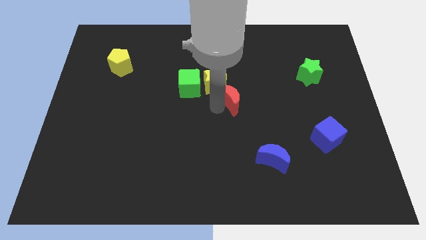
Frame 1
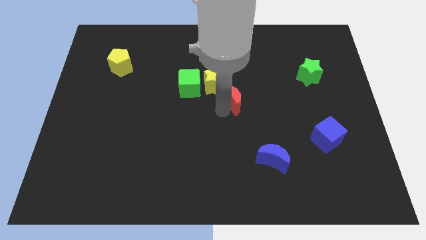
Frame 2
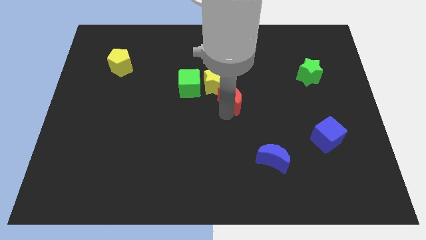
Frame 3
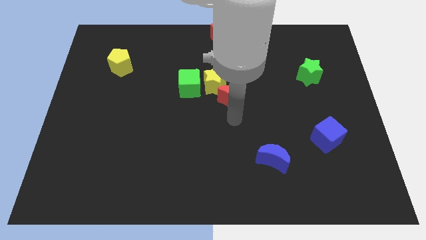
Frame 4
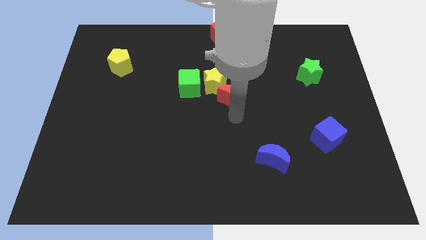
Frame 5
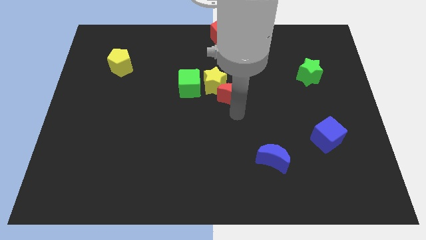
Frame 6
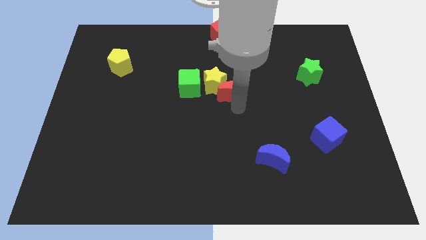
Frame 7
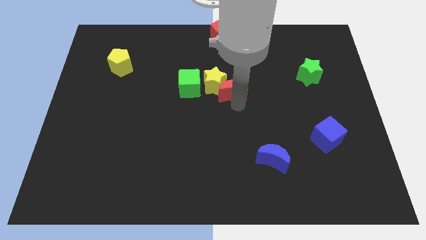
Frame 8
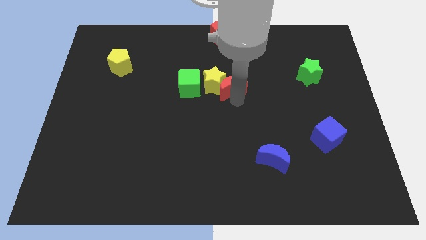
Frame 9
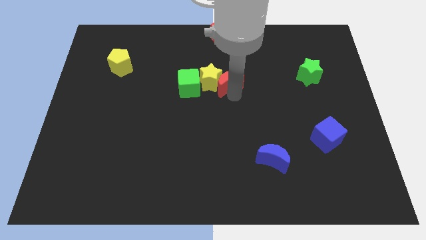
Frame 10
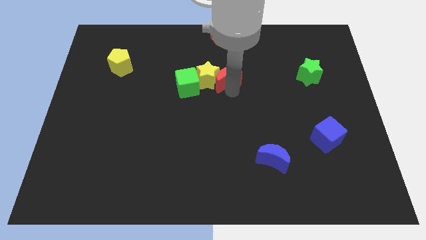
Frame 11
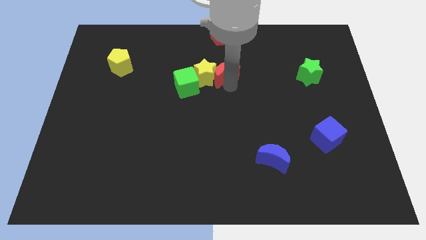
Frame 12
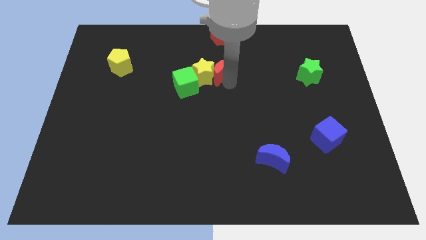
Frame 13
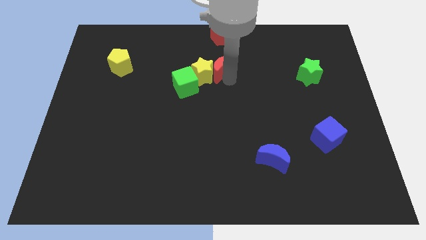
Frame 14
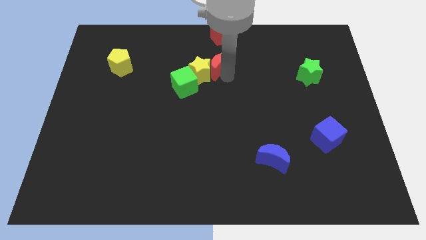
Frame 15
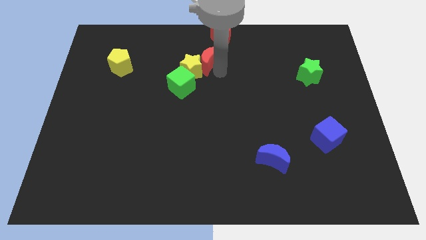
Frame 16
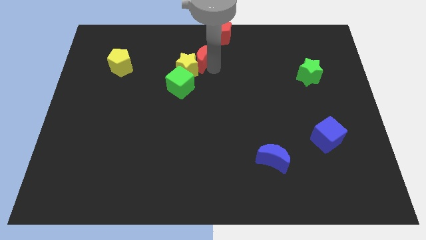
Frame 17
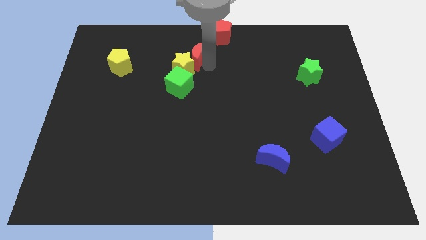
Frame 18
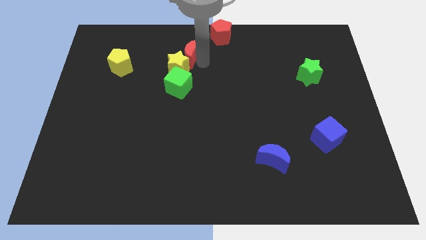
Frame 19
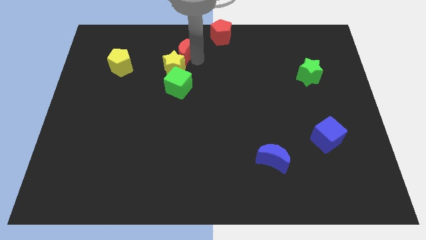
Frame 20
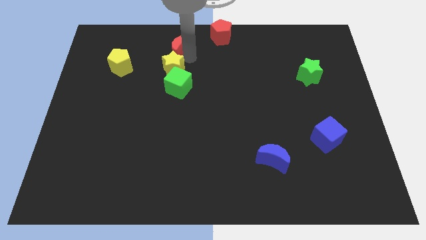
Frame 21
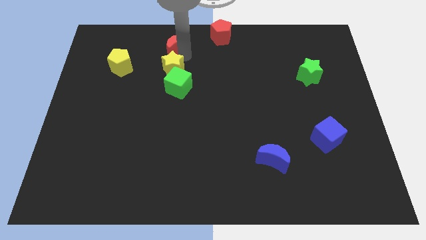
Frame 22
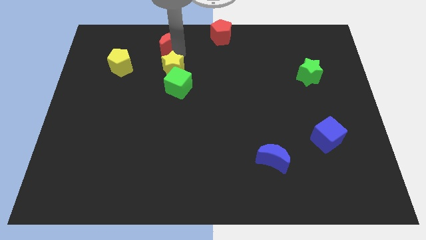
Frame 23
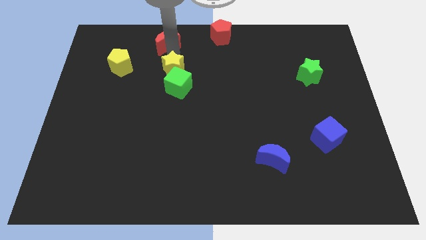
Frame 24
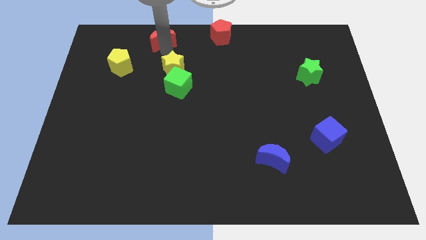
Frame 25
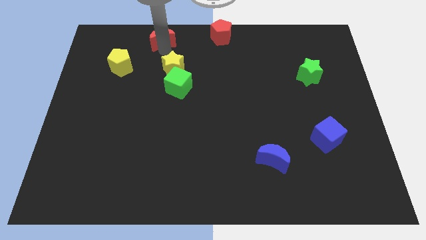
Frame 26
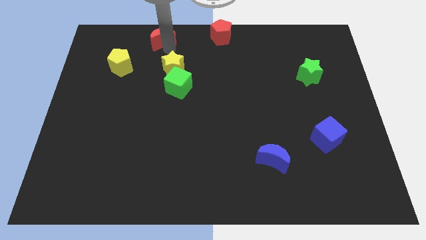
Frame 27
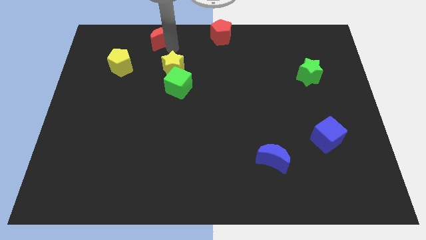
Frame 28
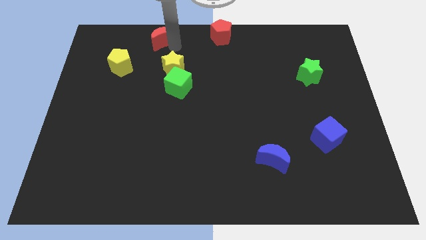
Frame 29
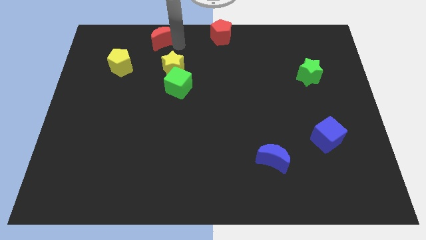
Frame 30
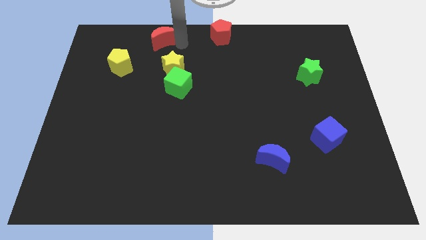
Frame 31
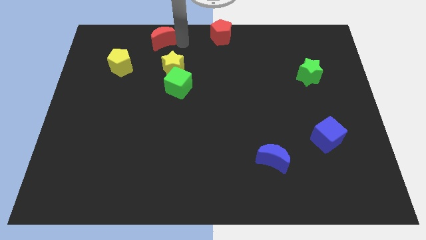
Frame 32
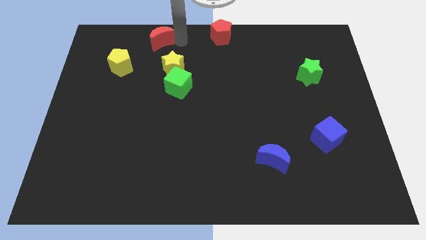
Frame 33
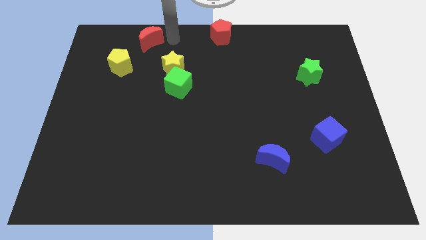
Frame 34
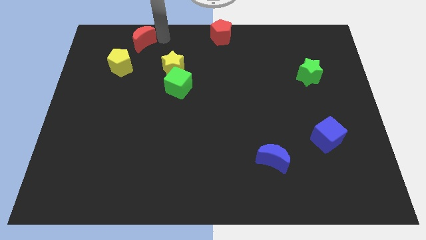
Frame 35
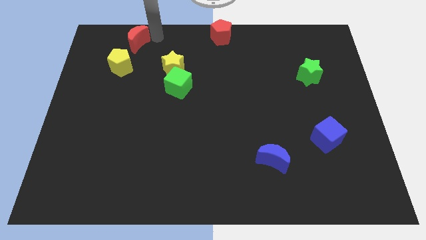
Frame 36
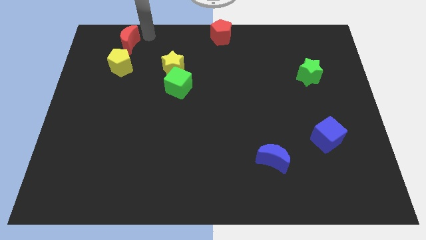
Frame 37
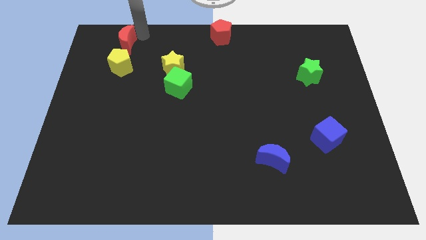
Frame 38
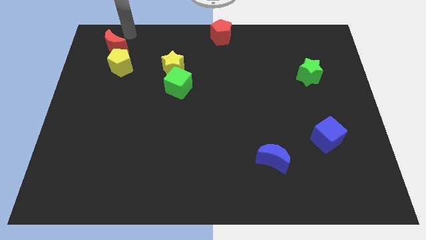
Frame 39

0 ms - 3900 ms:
move the red crescent above the yellow pentagon

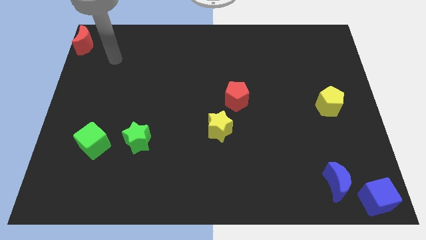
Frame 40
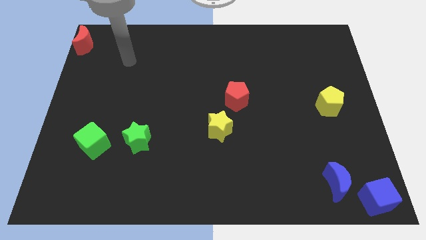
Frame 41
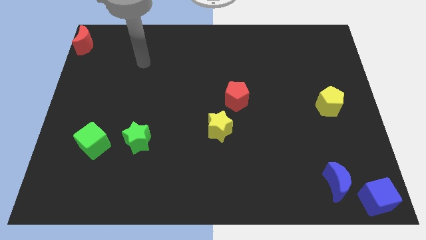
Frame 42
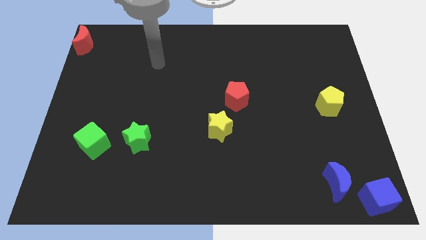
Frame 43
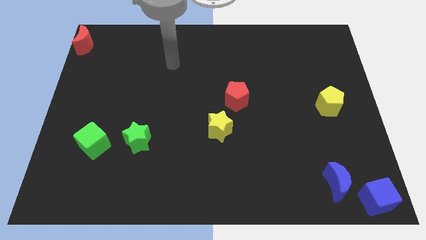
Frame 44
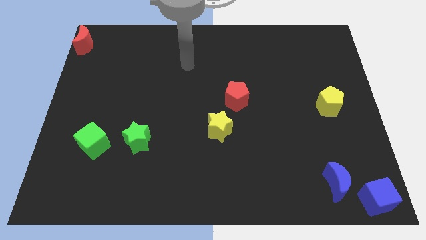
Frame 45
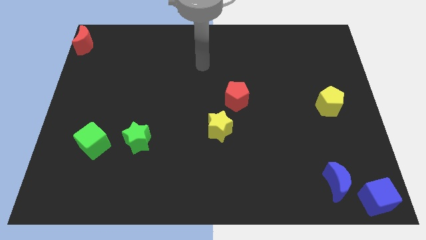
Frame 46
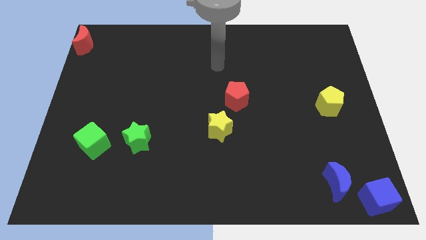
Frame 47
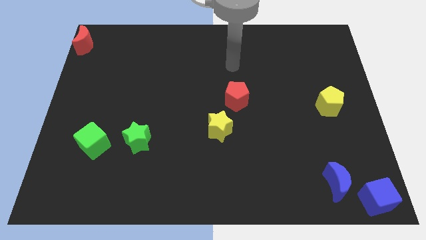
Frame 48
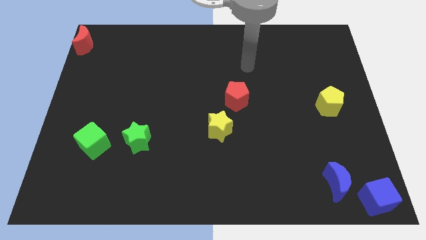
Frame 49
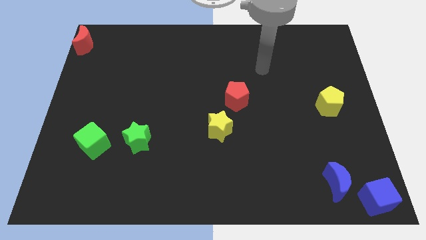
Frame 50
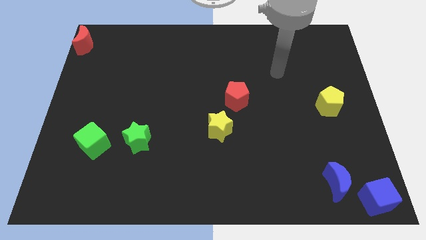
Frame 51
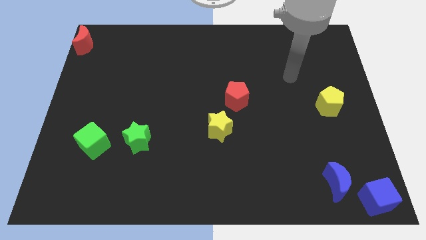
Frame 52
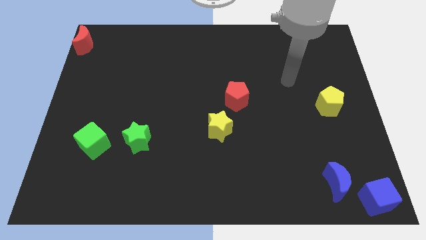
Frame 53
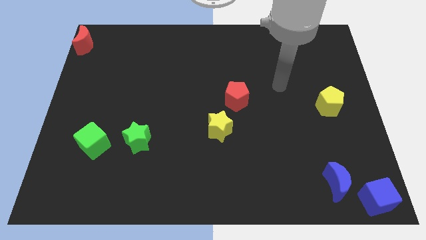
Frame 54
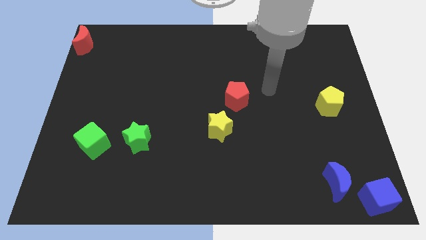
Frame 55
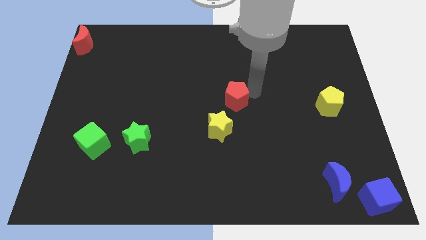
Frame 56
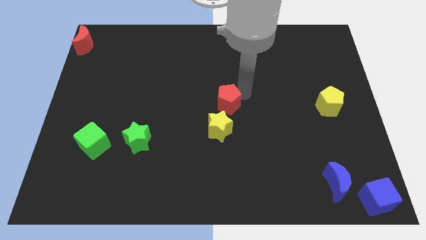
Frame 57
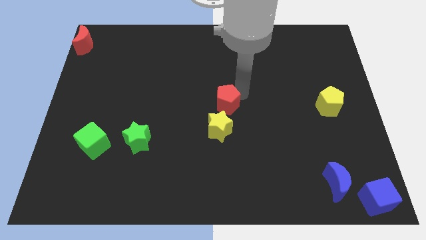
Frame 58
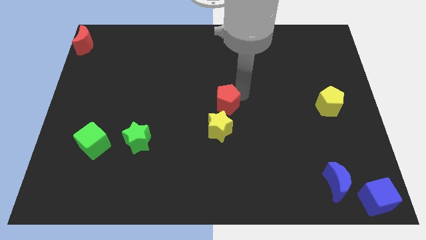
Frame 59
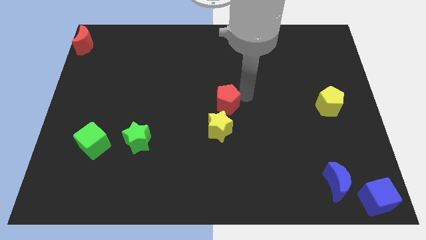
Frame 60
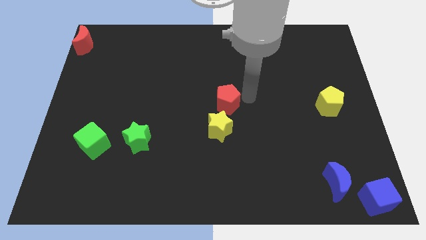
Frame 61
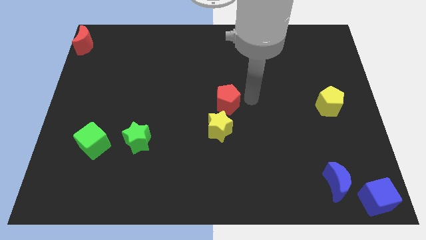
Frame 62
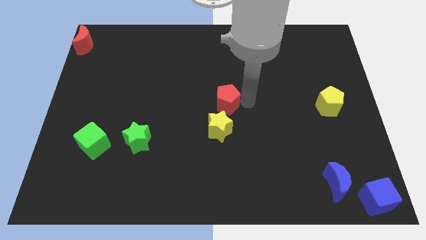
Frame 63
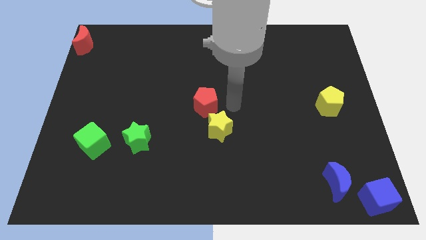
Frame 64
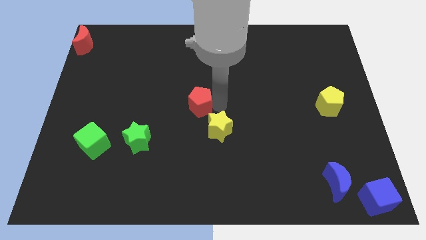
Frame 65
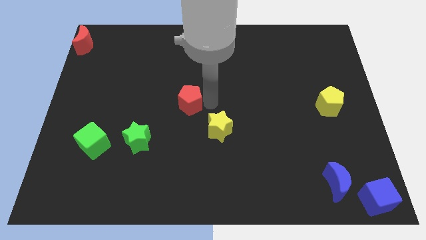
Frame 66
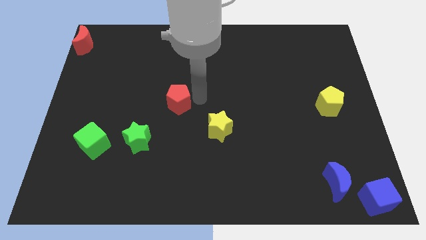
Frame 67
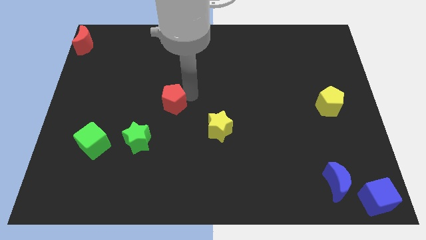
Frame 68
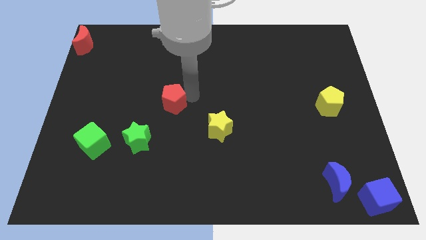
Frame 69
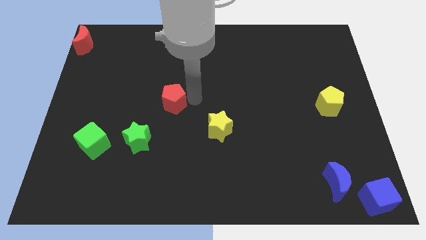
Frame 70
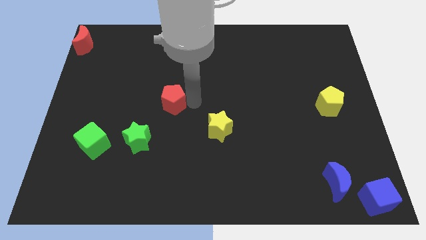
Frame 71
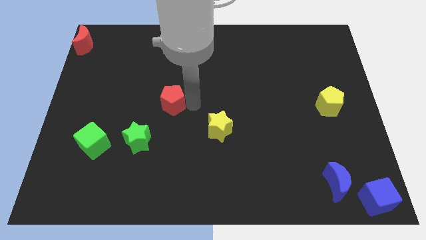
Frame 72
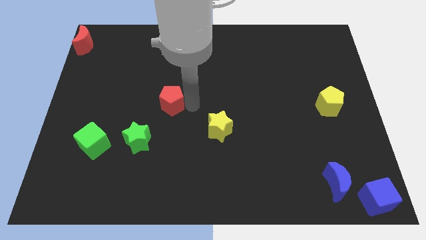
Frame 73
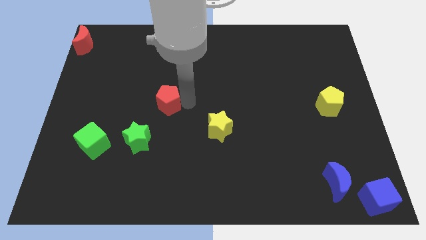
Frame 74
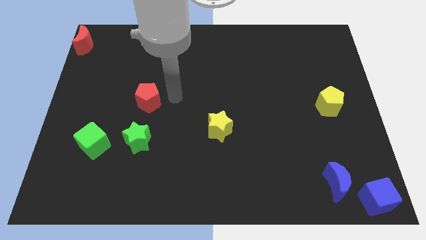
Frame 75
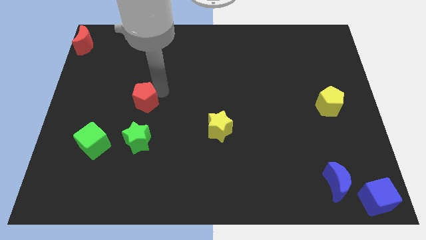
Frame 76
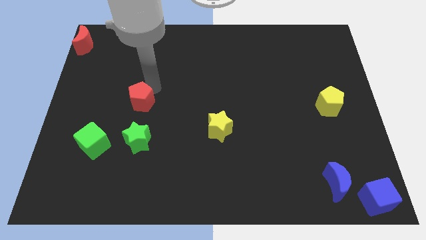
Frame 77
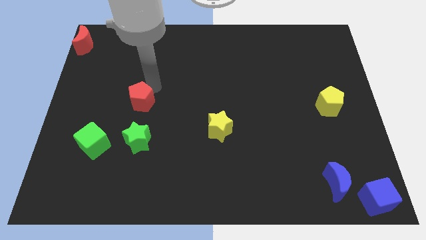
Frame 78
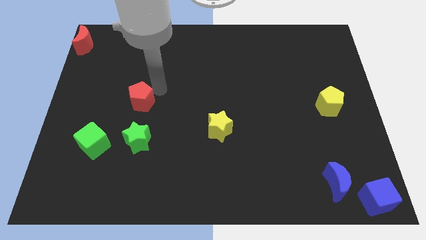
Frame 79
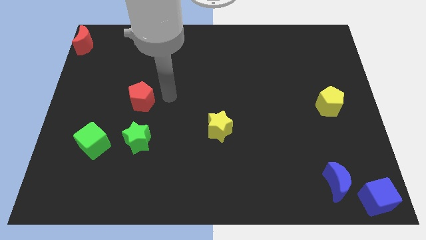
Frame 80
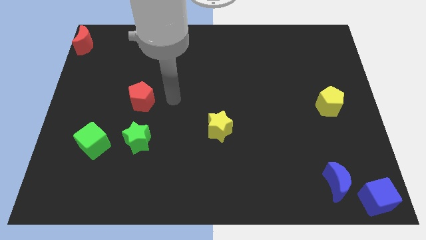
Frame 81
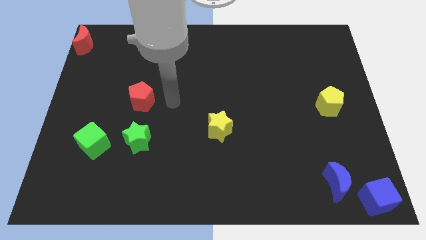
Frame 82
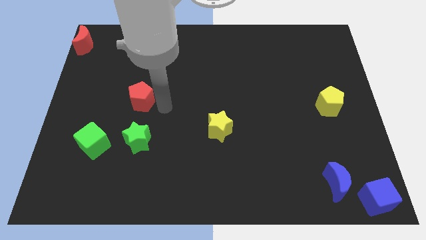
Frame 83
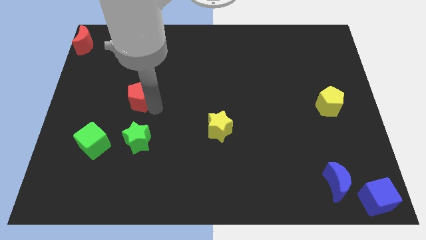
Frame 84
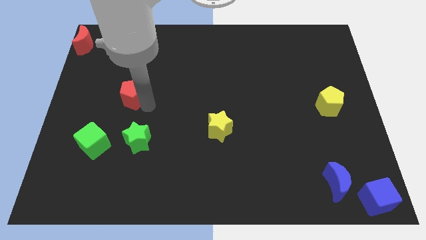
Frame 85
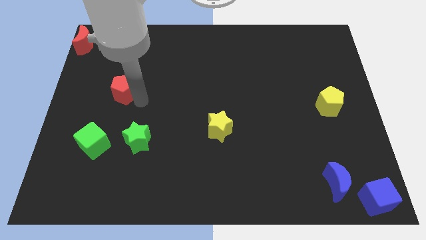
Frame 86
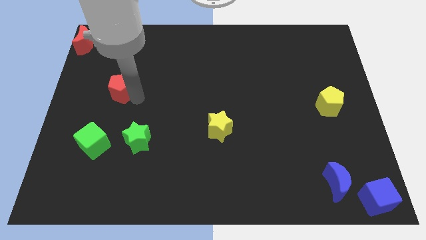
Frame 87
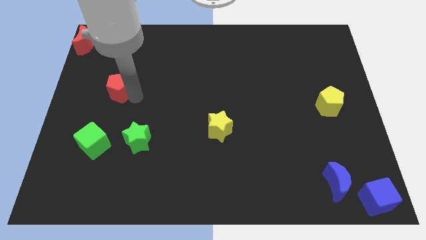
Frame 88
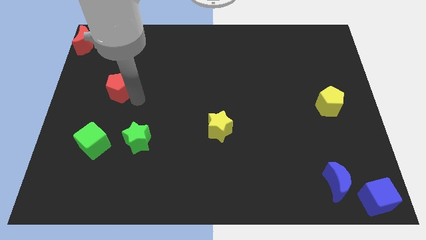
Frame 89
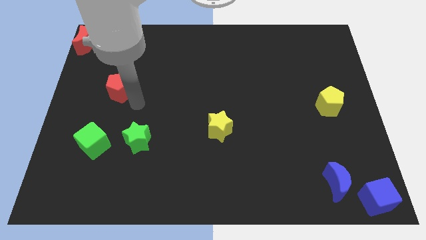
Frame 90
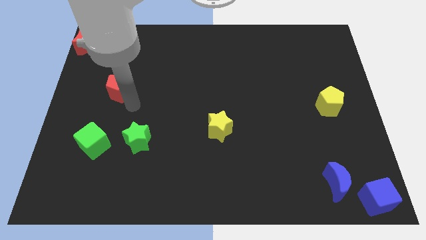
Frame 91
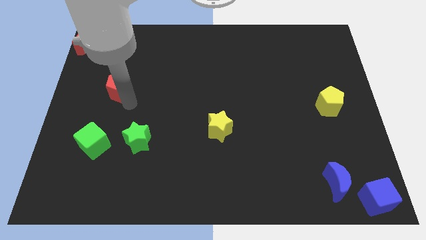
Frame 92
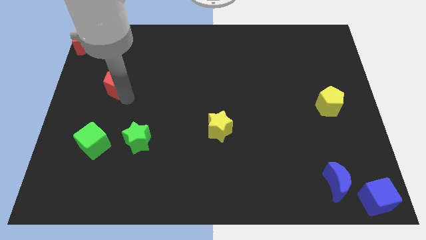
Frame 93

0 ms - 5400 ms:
place the red pentagon vertically above the green cube
